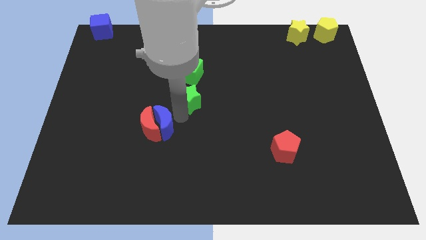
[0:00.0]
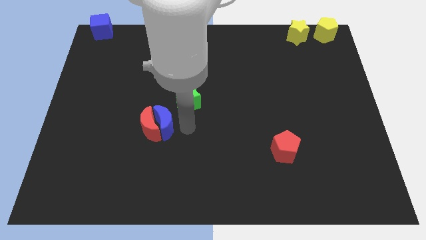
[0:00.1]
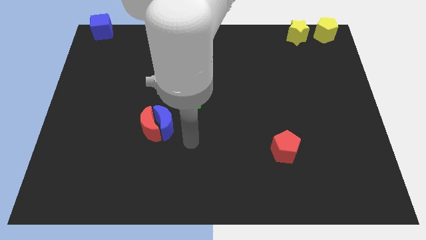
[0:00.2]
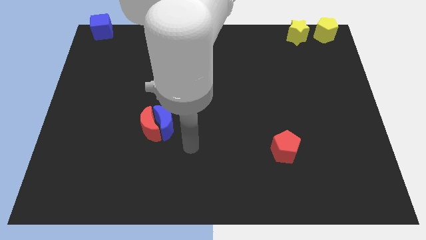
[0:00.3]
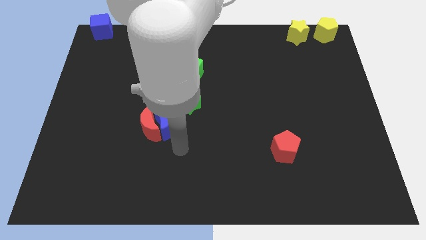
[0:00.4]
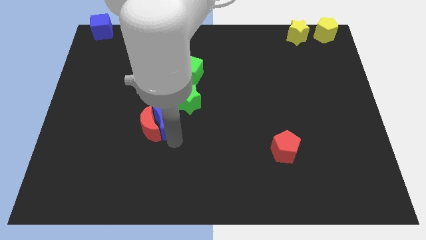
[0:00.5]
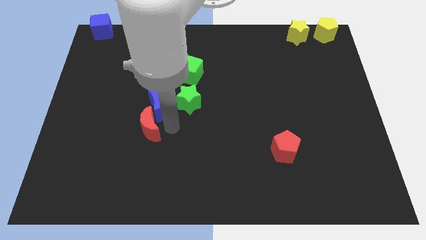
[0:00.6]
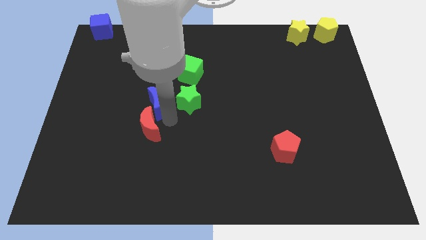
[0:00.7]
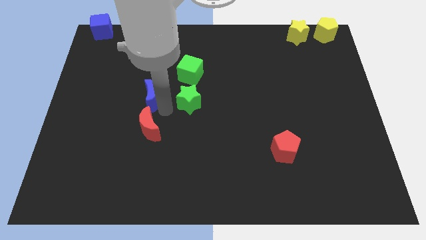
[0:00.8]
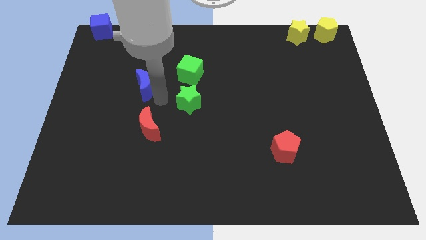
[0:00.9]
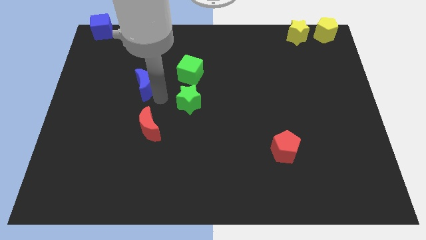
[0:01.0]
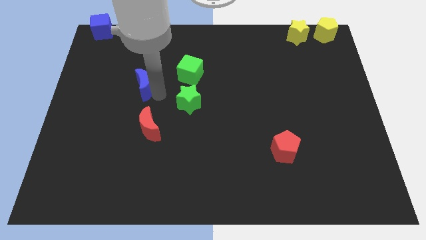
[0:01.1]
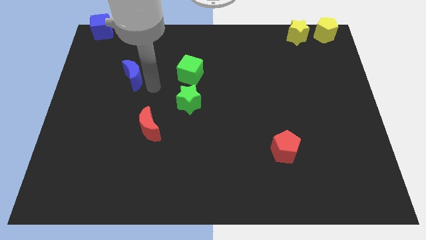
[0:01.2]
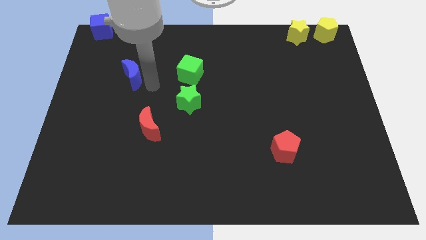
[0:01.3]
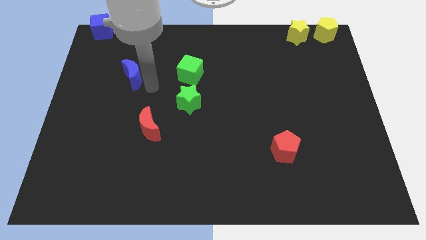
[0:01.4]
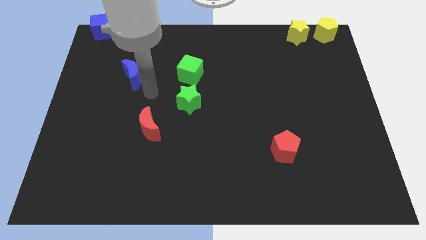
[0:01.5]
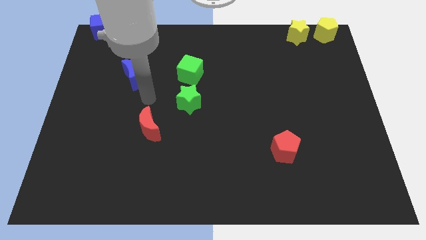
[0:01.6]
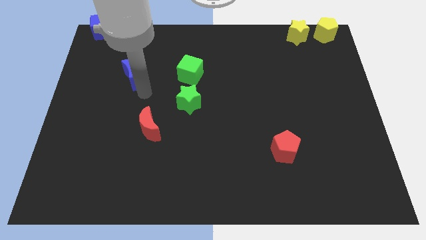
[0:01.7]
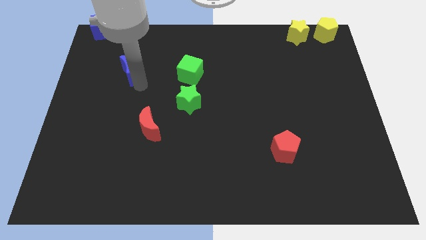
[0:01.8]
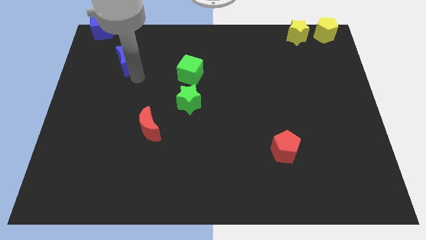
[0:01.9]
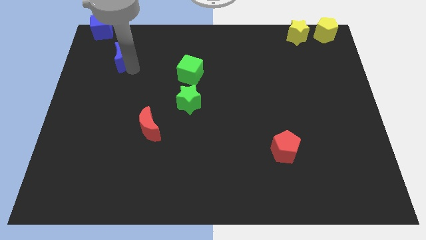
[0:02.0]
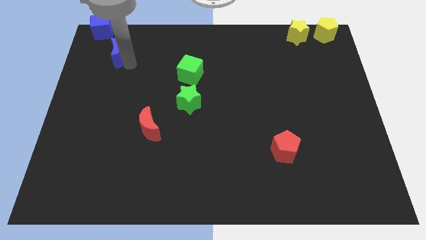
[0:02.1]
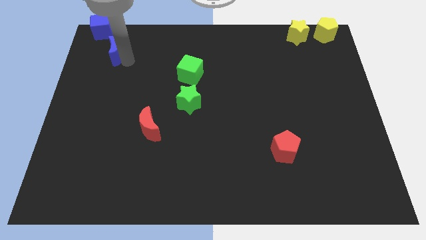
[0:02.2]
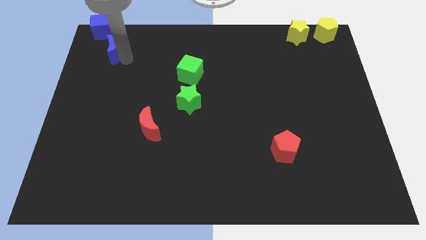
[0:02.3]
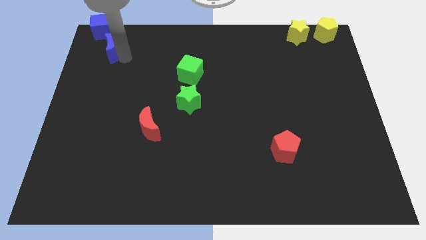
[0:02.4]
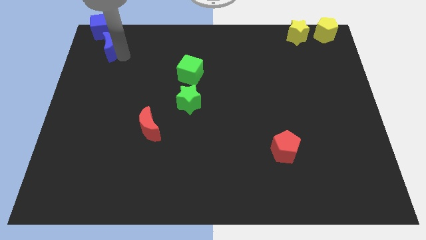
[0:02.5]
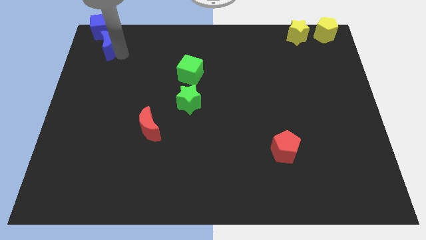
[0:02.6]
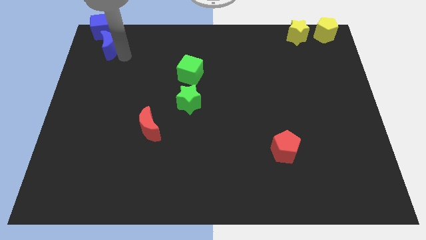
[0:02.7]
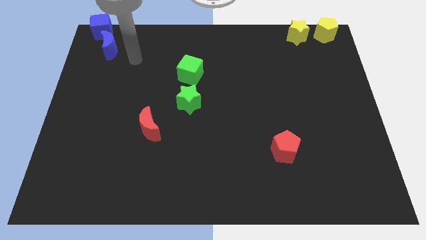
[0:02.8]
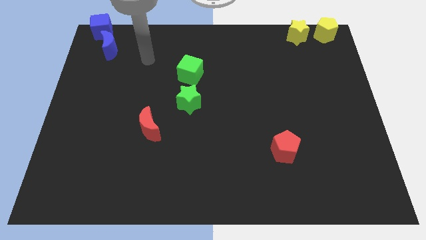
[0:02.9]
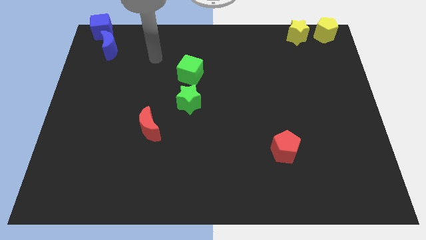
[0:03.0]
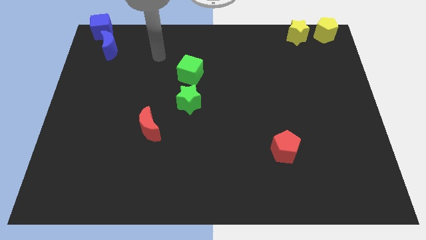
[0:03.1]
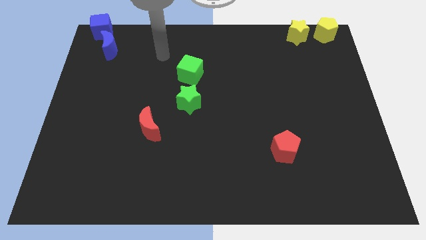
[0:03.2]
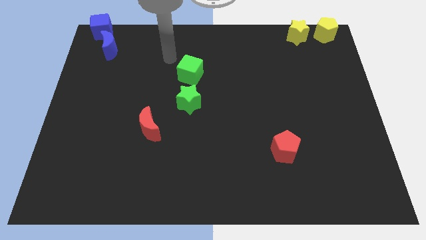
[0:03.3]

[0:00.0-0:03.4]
move the blue crescent to the bottom of the blue cube

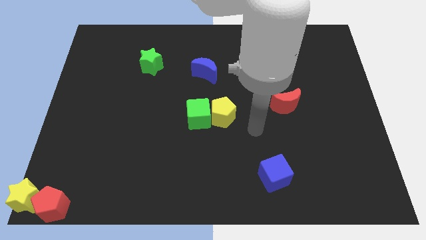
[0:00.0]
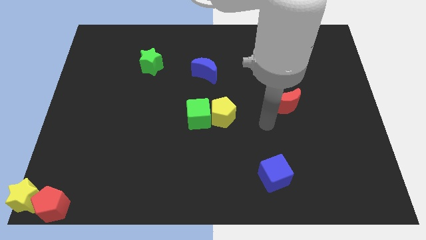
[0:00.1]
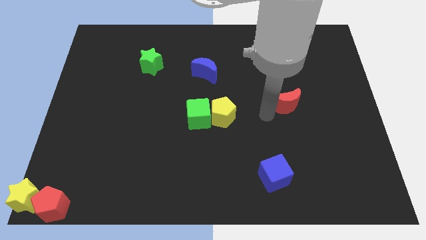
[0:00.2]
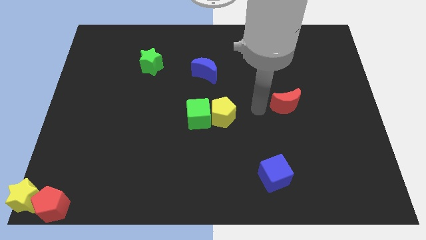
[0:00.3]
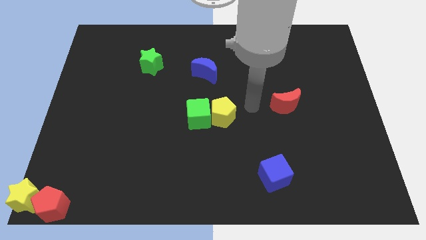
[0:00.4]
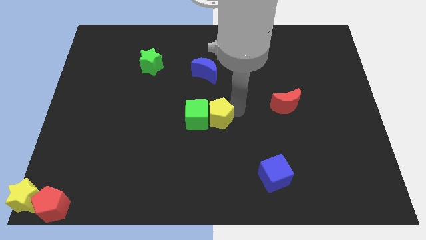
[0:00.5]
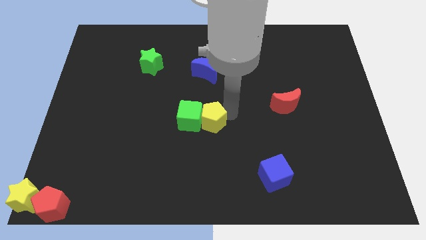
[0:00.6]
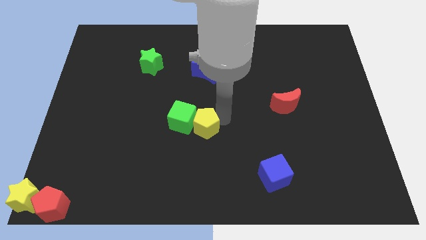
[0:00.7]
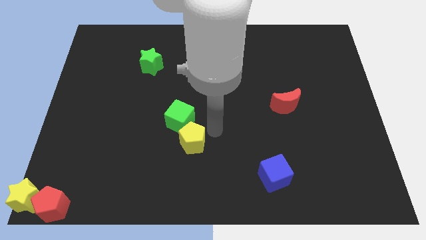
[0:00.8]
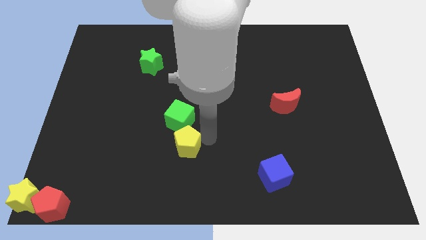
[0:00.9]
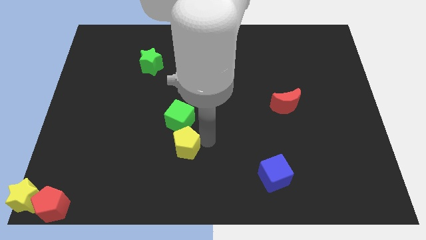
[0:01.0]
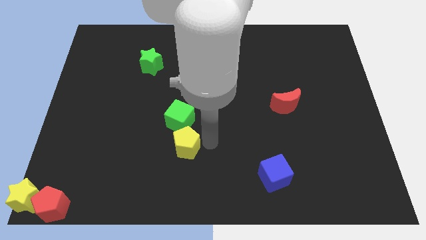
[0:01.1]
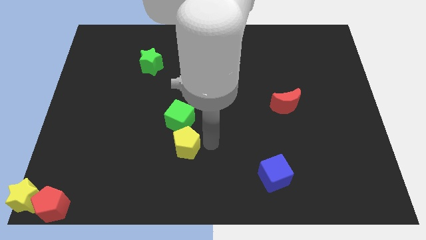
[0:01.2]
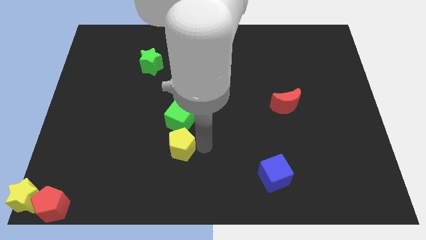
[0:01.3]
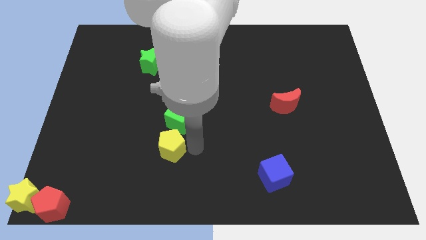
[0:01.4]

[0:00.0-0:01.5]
place the yellow pentagon below the green cube

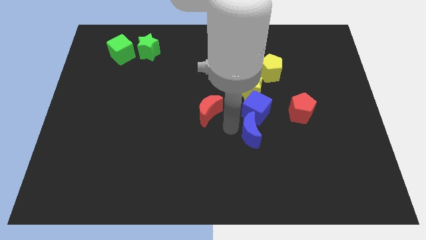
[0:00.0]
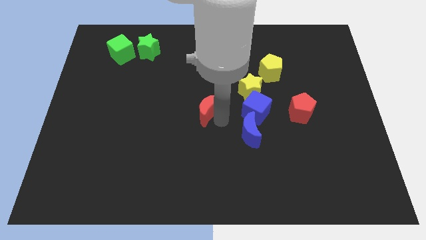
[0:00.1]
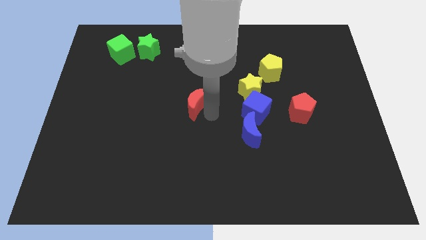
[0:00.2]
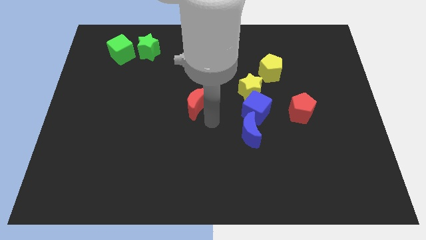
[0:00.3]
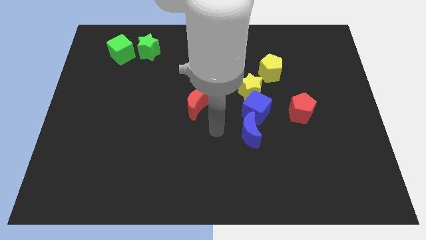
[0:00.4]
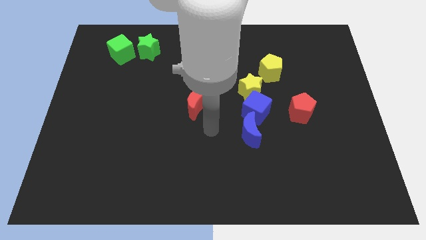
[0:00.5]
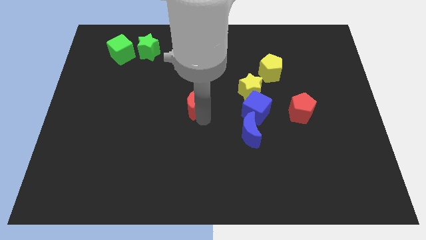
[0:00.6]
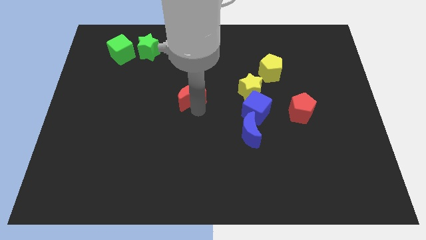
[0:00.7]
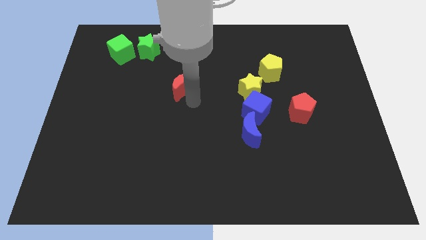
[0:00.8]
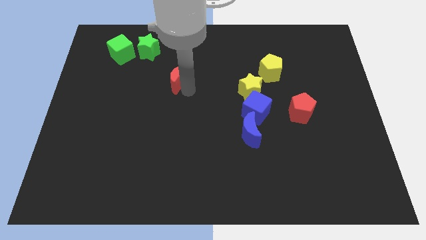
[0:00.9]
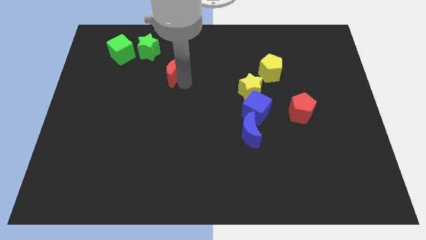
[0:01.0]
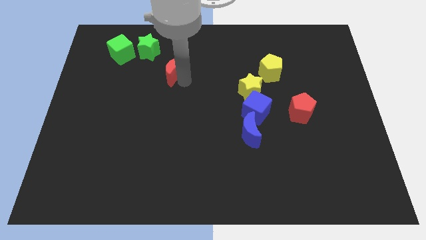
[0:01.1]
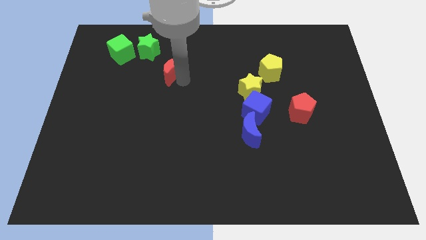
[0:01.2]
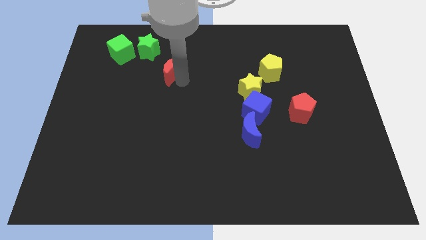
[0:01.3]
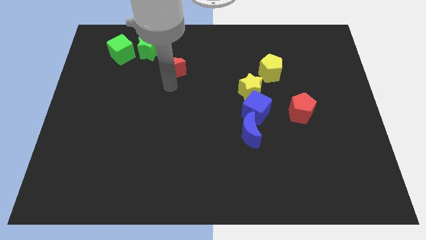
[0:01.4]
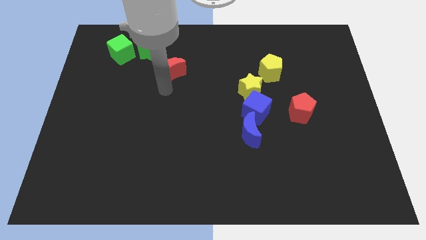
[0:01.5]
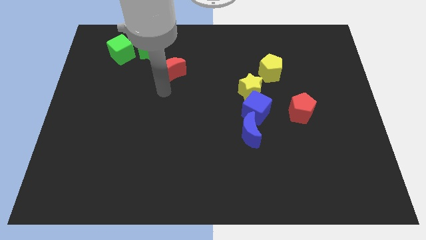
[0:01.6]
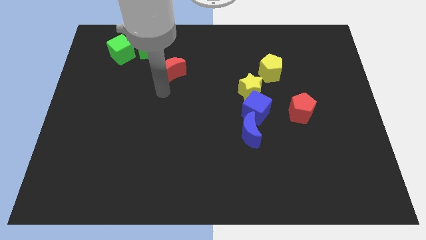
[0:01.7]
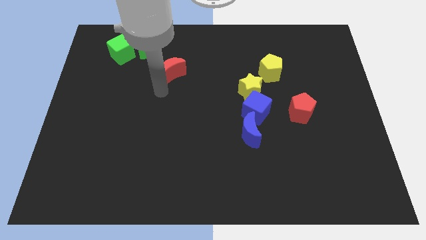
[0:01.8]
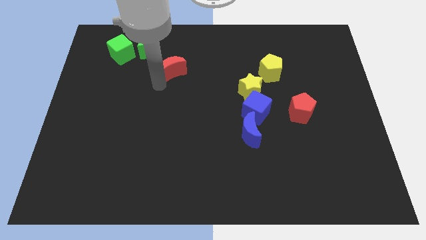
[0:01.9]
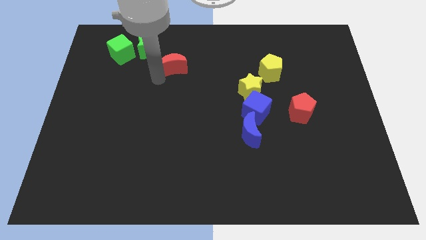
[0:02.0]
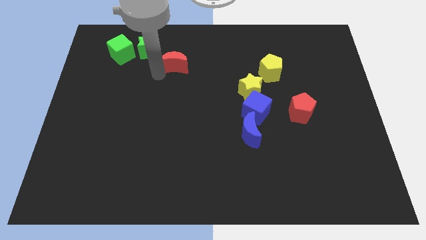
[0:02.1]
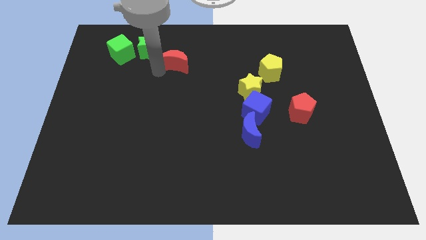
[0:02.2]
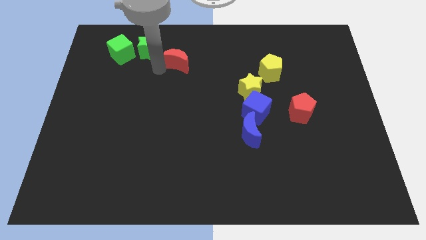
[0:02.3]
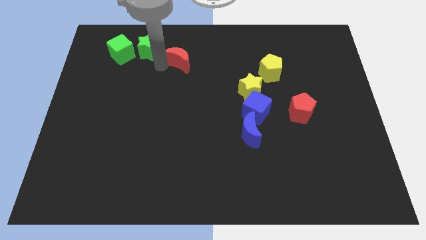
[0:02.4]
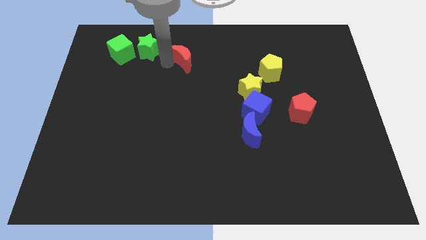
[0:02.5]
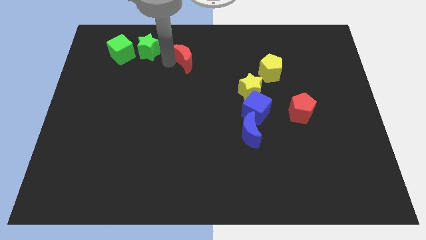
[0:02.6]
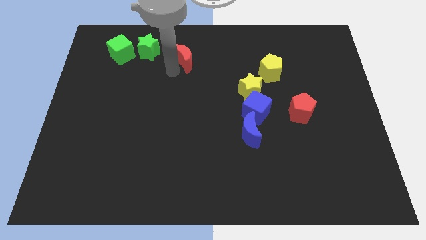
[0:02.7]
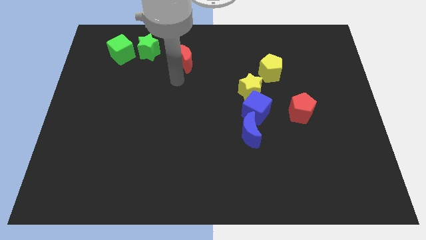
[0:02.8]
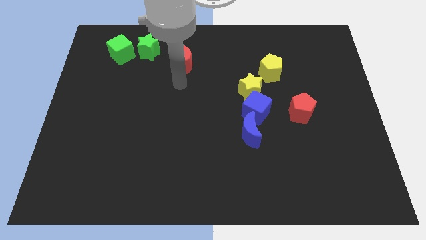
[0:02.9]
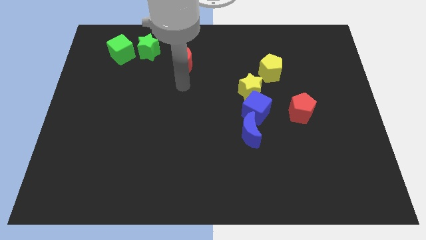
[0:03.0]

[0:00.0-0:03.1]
push the red moon closer to the green star

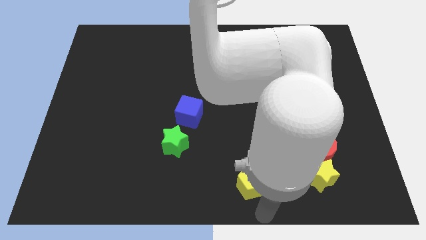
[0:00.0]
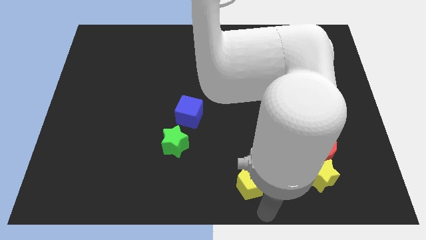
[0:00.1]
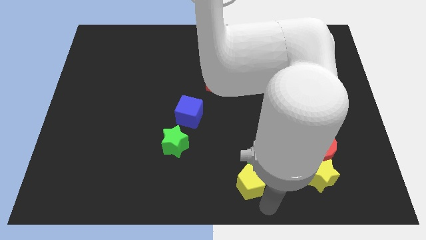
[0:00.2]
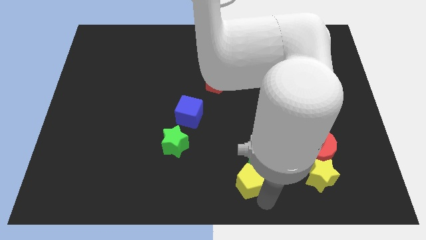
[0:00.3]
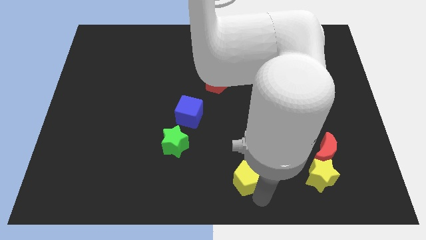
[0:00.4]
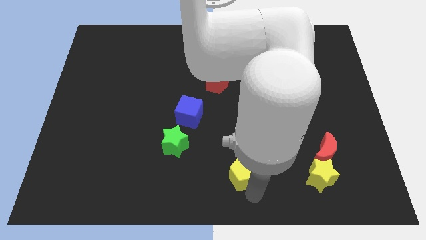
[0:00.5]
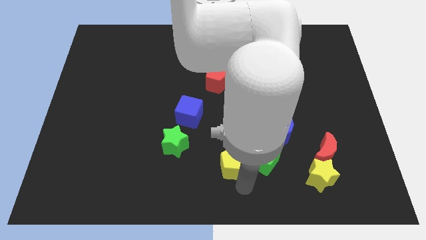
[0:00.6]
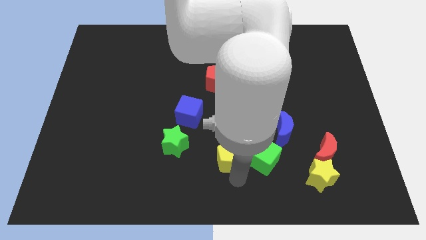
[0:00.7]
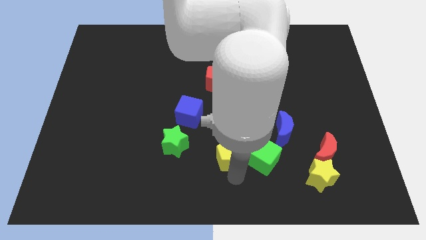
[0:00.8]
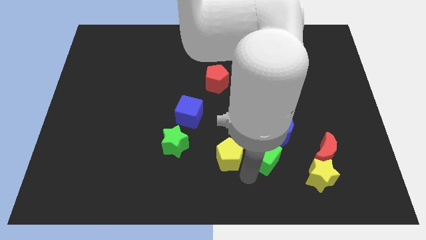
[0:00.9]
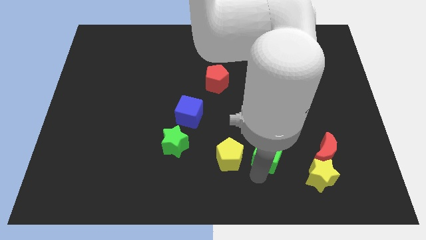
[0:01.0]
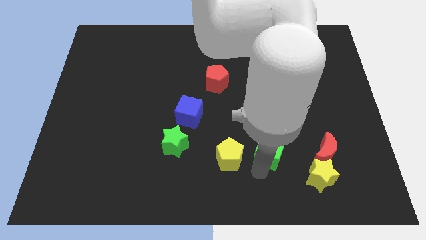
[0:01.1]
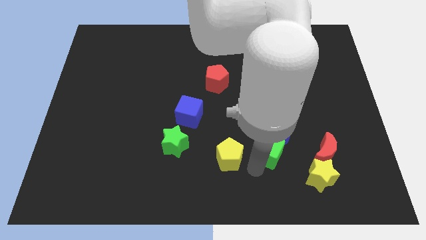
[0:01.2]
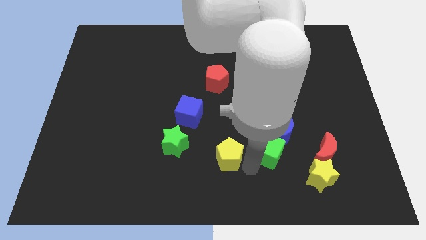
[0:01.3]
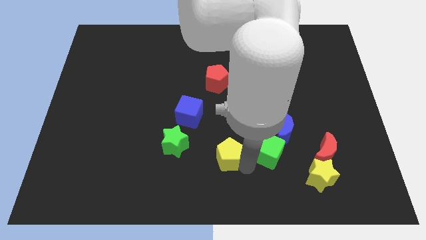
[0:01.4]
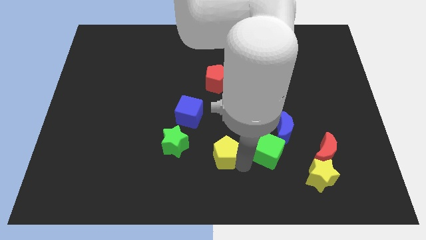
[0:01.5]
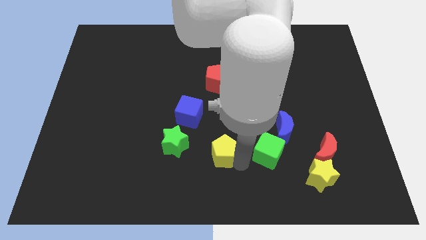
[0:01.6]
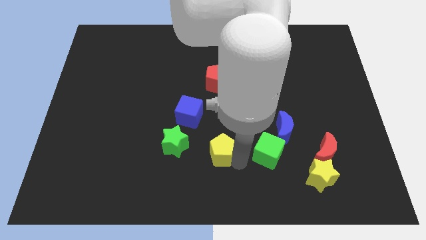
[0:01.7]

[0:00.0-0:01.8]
place the yellow pentagon in between the green blocks
